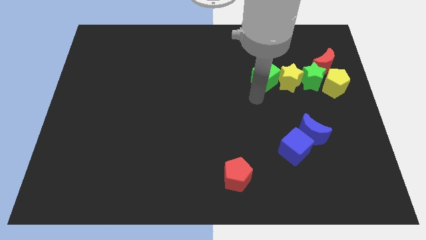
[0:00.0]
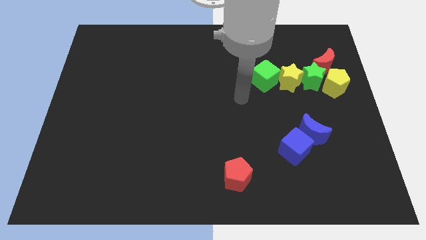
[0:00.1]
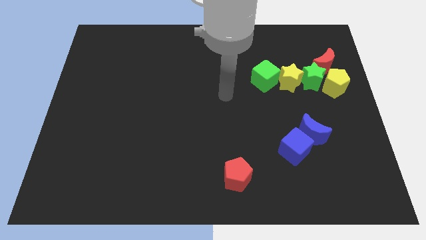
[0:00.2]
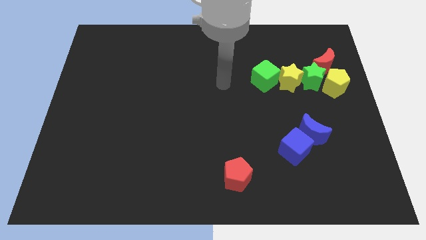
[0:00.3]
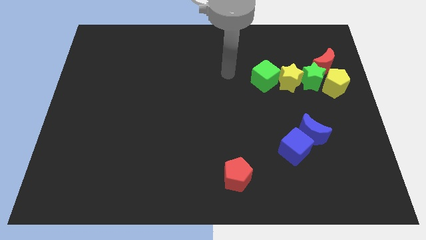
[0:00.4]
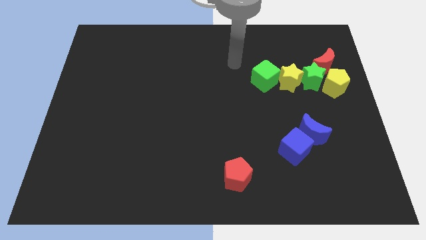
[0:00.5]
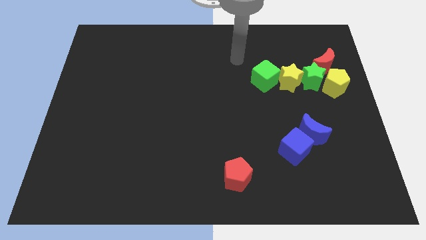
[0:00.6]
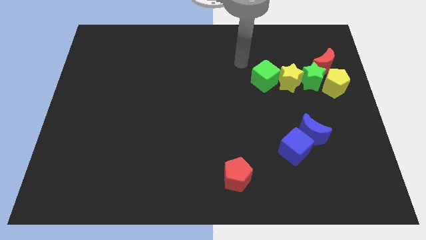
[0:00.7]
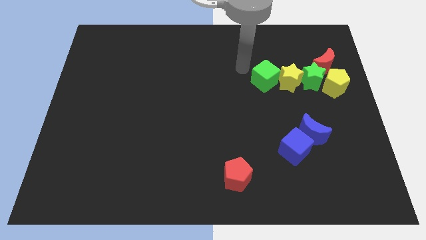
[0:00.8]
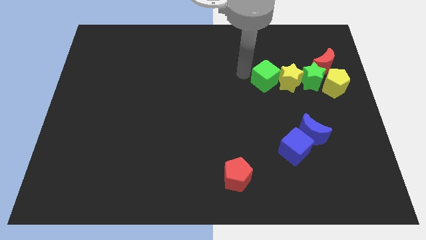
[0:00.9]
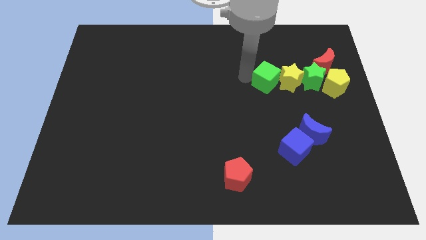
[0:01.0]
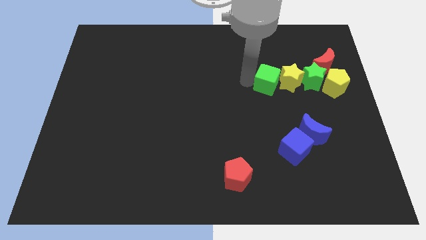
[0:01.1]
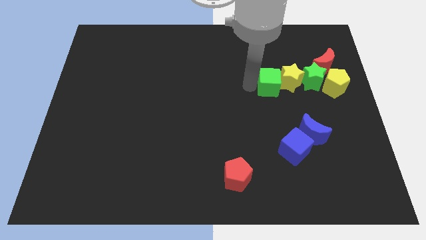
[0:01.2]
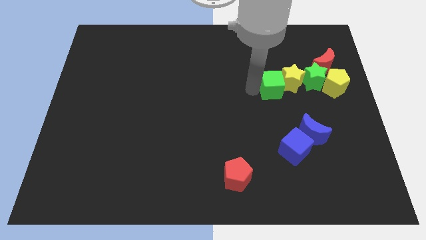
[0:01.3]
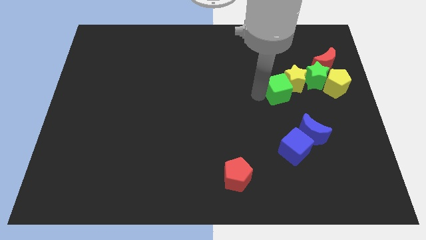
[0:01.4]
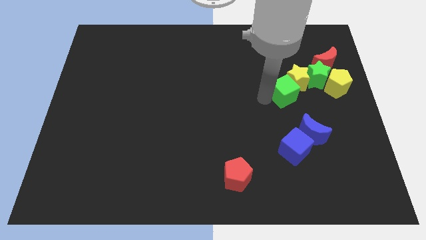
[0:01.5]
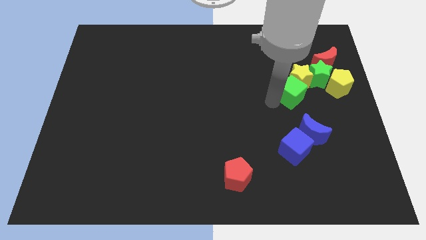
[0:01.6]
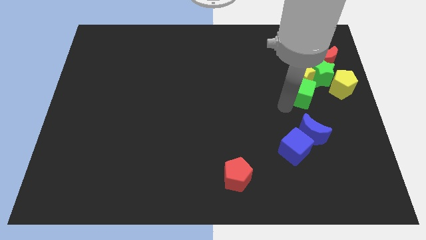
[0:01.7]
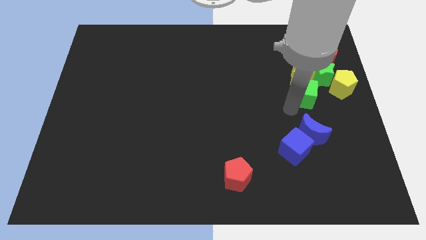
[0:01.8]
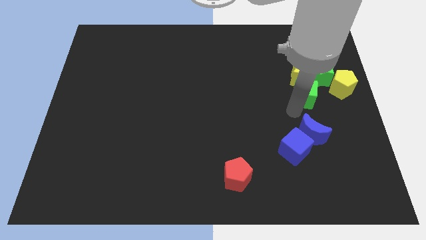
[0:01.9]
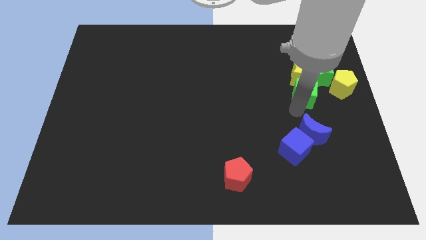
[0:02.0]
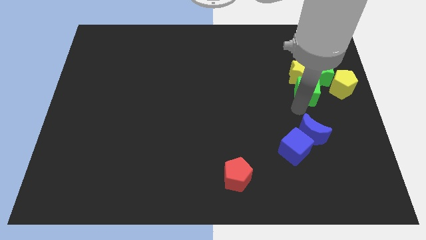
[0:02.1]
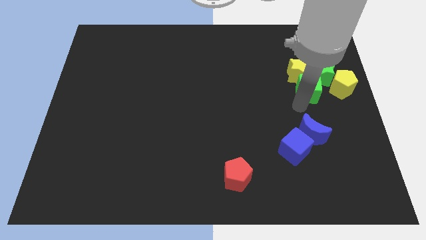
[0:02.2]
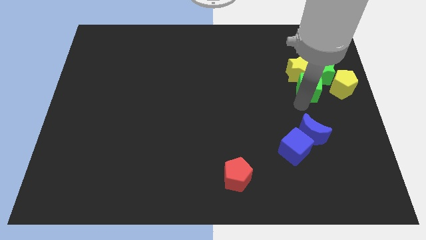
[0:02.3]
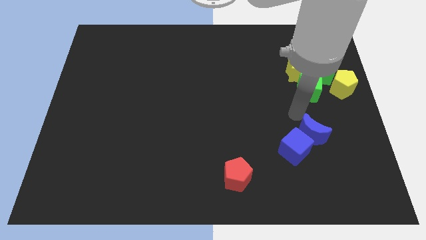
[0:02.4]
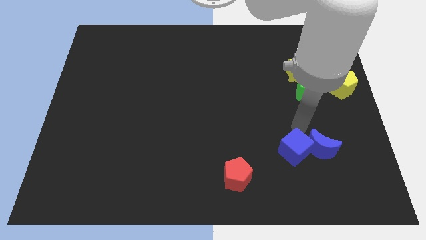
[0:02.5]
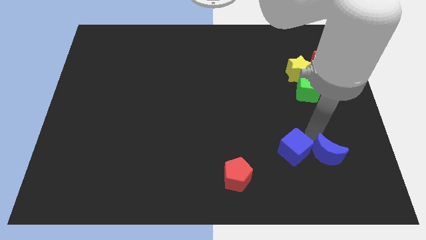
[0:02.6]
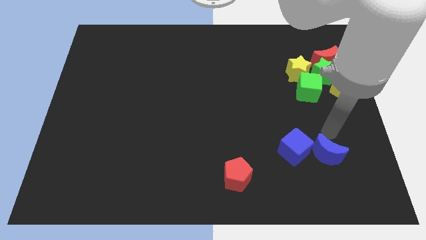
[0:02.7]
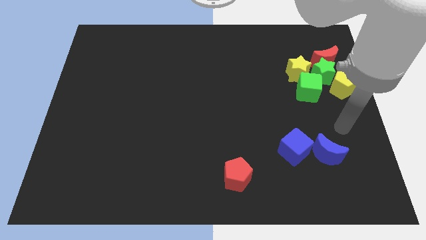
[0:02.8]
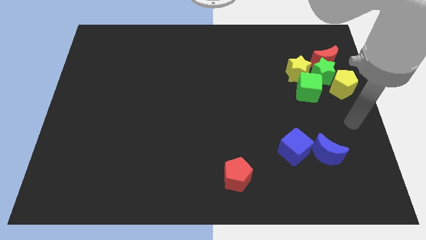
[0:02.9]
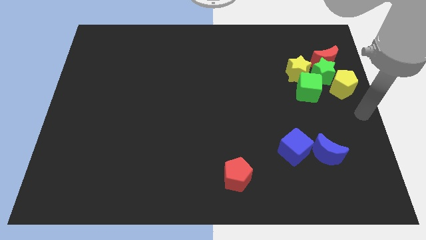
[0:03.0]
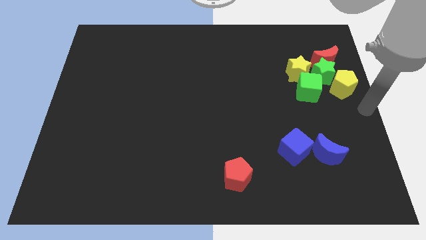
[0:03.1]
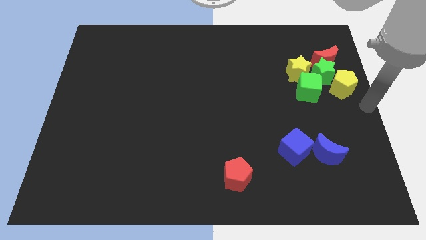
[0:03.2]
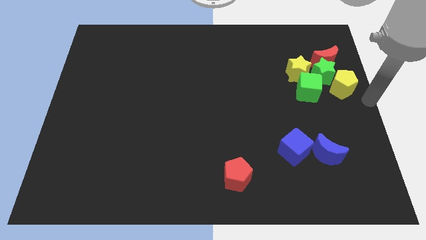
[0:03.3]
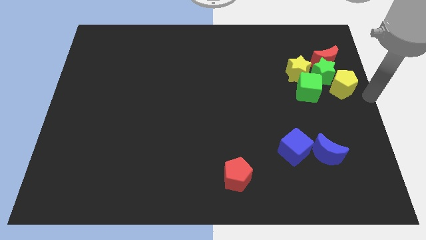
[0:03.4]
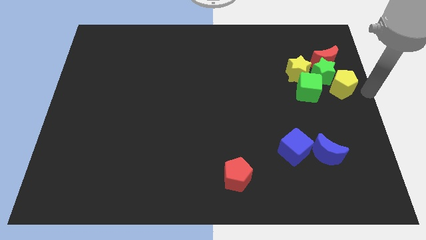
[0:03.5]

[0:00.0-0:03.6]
push green cube into green star

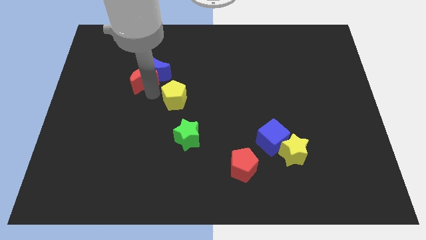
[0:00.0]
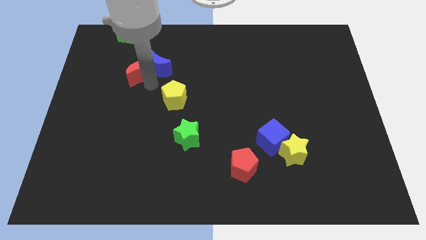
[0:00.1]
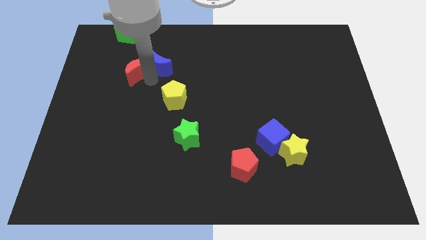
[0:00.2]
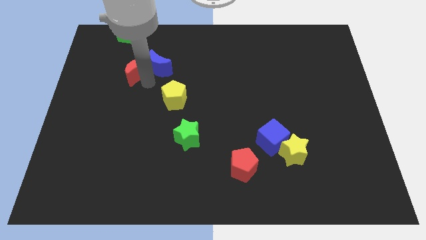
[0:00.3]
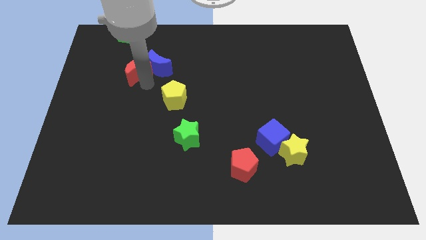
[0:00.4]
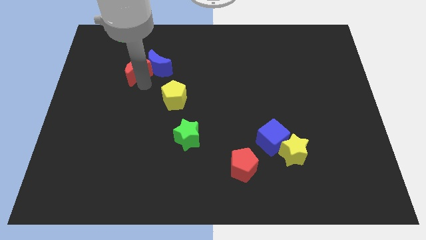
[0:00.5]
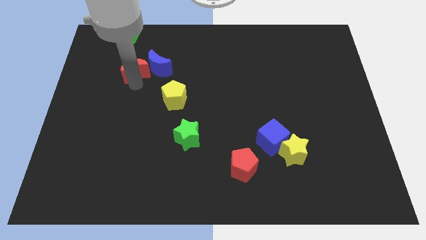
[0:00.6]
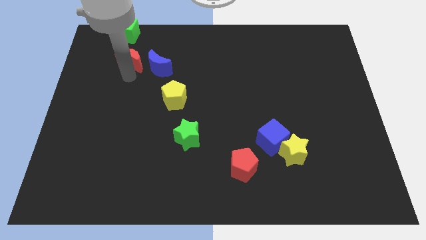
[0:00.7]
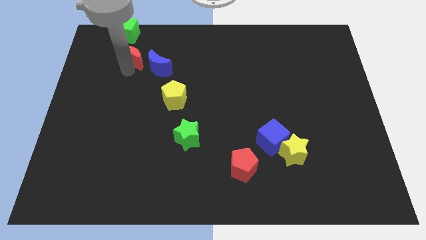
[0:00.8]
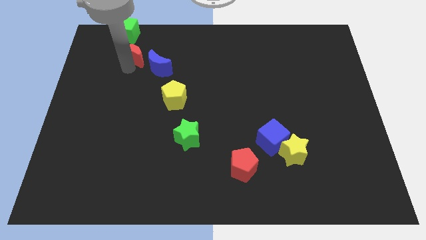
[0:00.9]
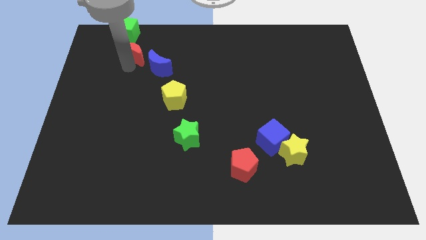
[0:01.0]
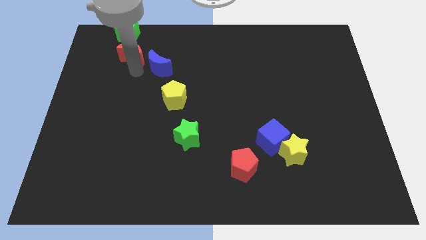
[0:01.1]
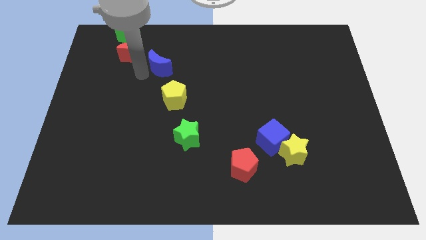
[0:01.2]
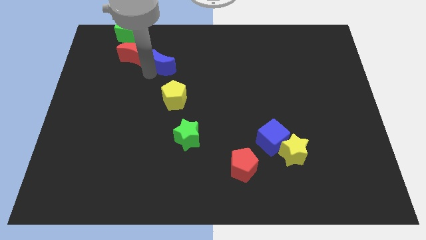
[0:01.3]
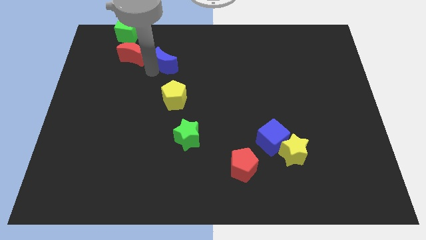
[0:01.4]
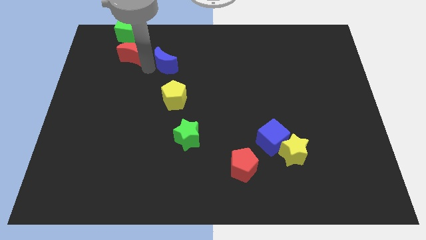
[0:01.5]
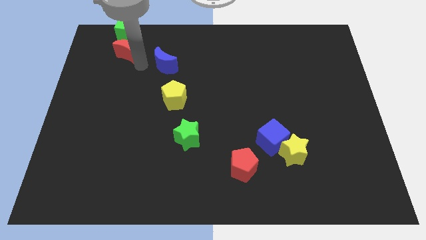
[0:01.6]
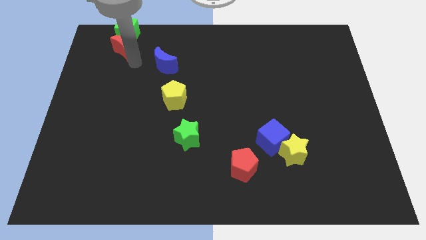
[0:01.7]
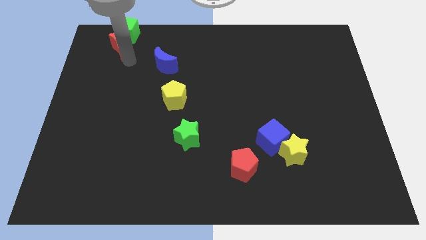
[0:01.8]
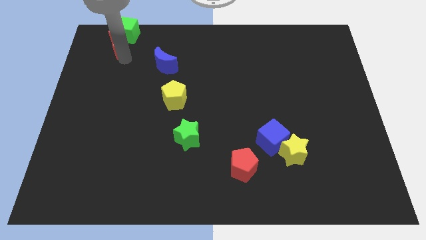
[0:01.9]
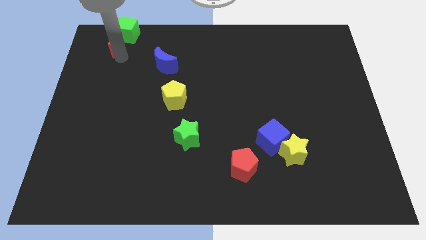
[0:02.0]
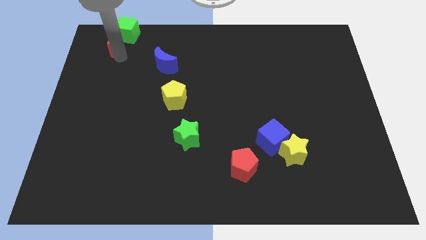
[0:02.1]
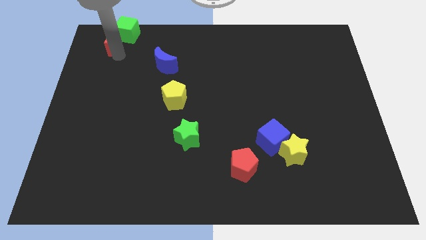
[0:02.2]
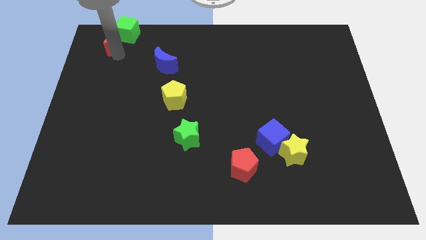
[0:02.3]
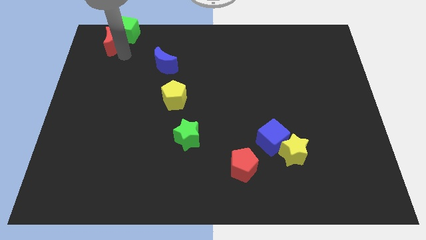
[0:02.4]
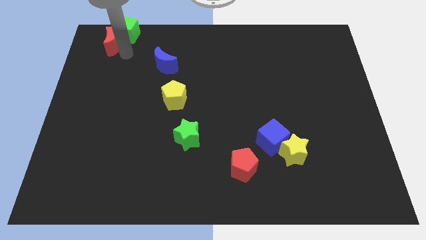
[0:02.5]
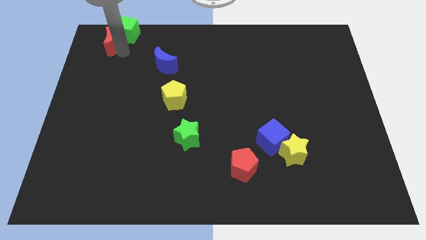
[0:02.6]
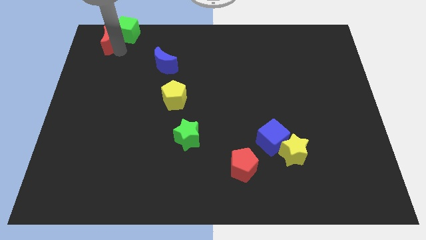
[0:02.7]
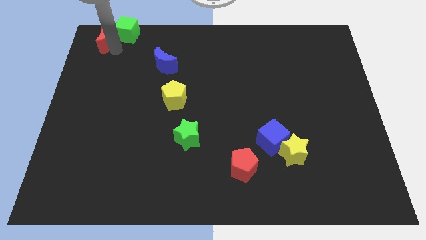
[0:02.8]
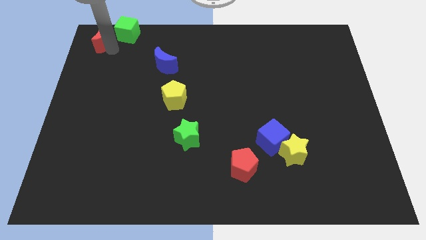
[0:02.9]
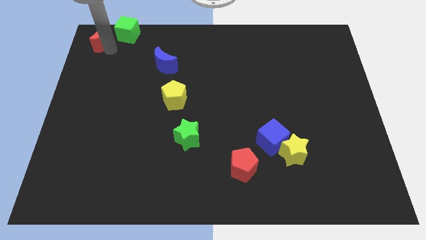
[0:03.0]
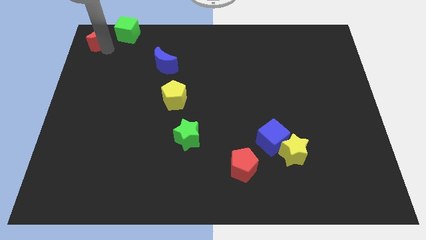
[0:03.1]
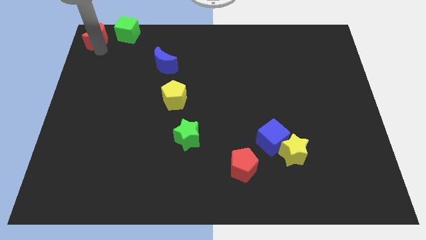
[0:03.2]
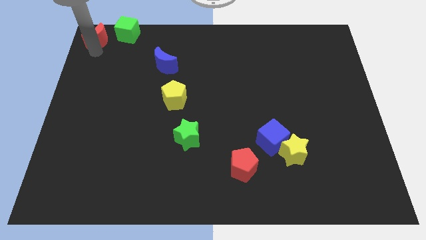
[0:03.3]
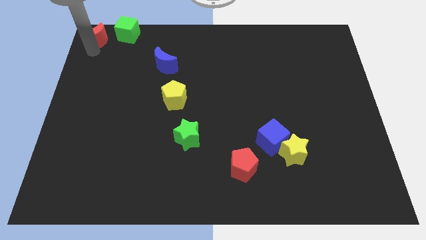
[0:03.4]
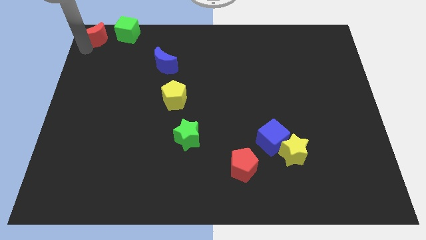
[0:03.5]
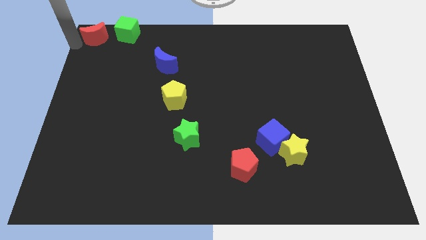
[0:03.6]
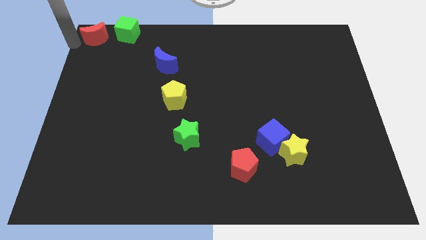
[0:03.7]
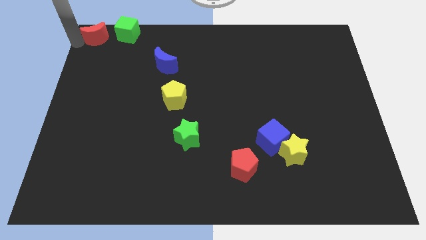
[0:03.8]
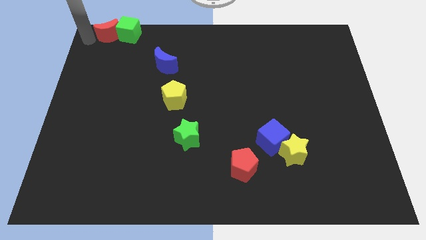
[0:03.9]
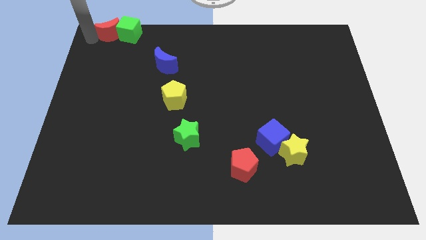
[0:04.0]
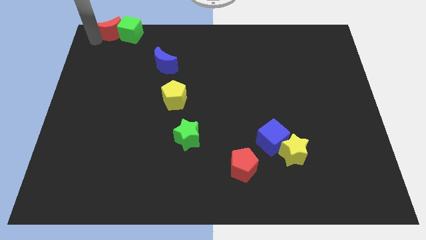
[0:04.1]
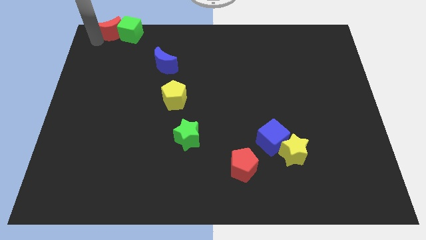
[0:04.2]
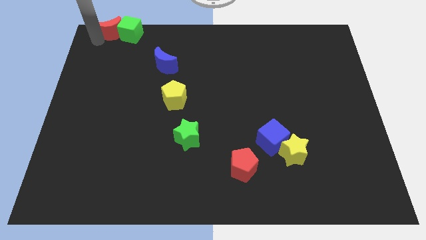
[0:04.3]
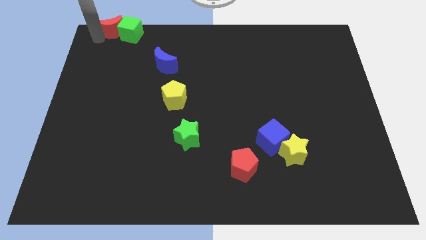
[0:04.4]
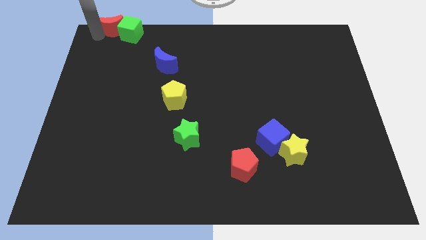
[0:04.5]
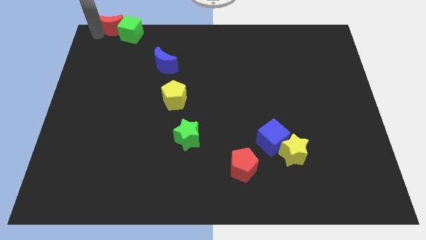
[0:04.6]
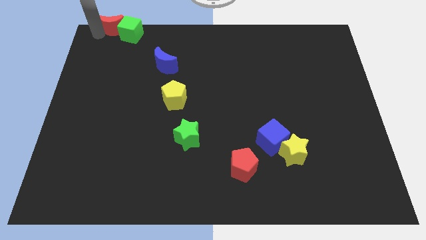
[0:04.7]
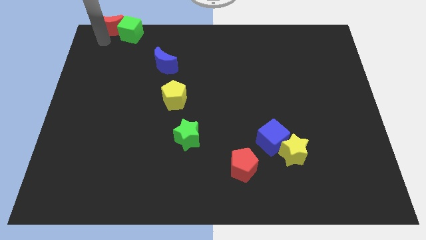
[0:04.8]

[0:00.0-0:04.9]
move the red crescent to the left side of the green cube

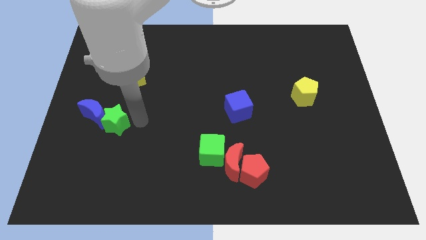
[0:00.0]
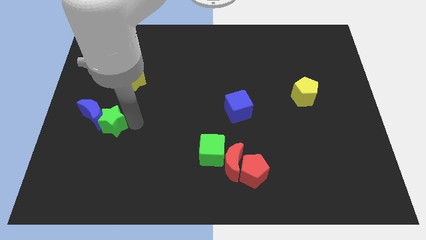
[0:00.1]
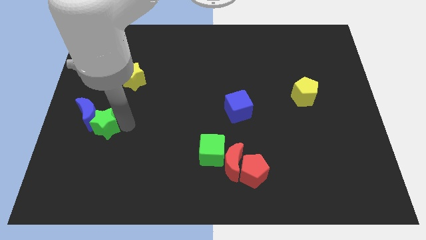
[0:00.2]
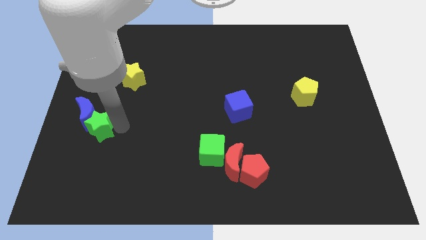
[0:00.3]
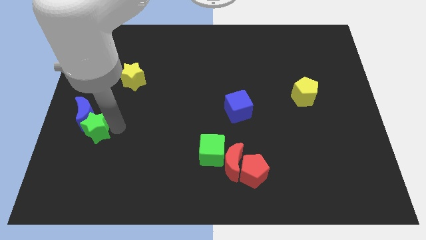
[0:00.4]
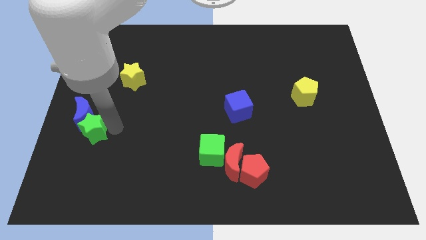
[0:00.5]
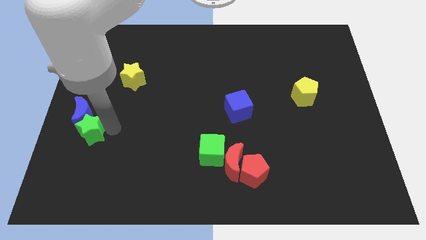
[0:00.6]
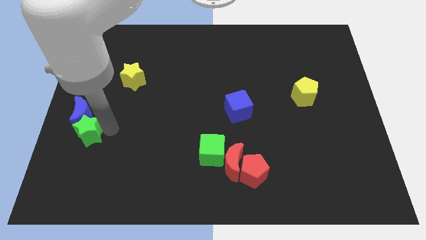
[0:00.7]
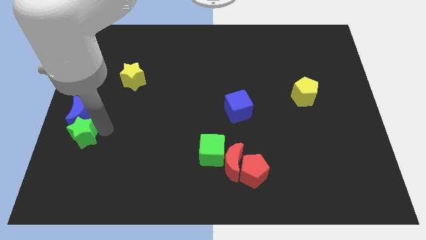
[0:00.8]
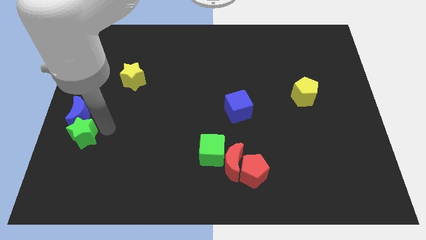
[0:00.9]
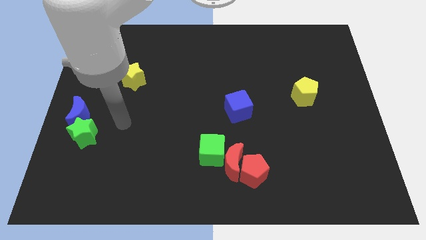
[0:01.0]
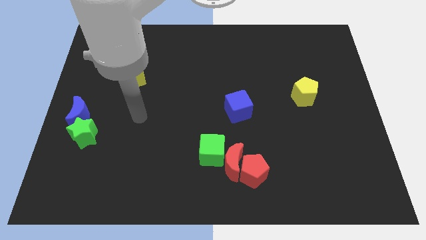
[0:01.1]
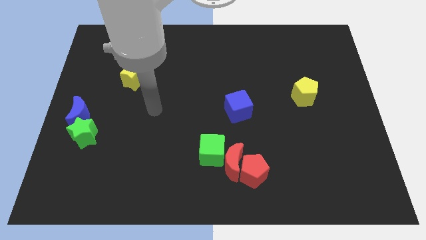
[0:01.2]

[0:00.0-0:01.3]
move the green star into the blue crescent
